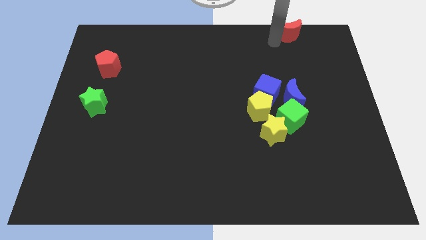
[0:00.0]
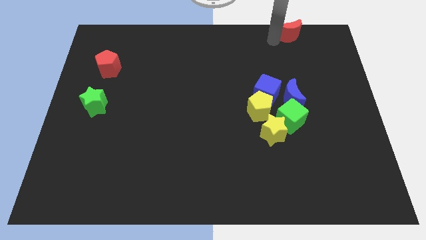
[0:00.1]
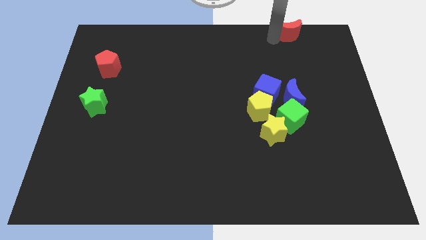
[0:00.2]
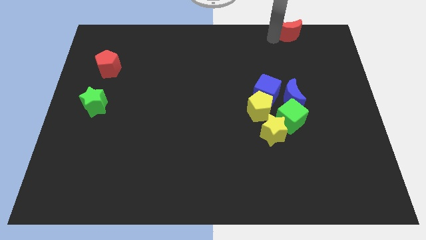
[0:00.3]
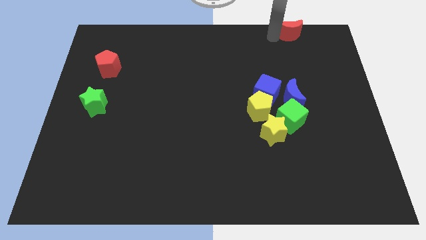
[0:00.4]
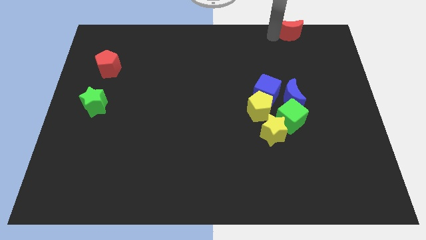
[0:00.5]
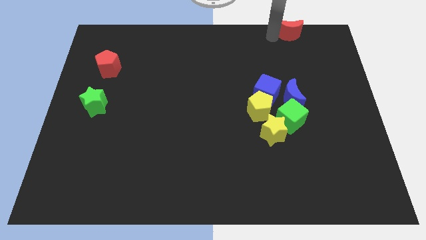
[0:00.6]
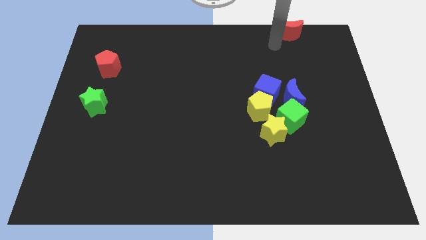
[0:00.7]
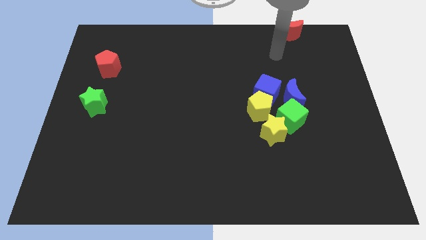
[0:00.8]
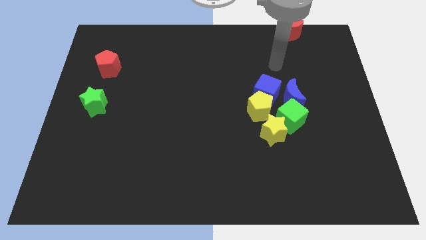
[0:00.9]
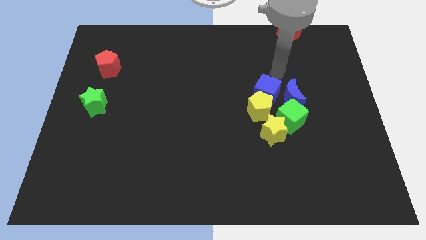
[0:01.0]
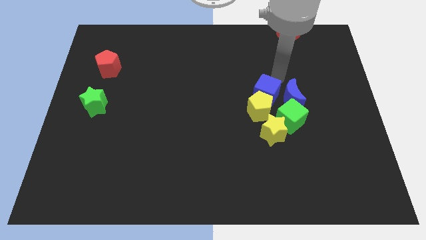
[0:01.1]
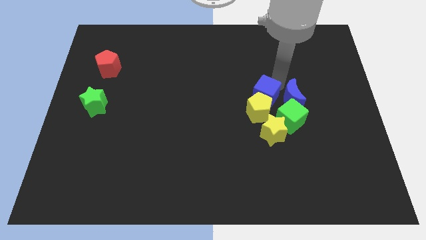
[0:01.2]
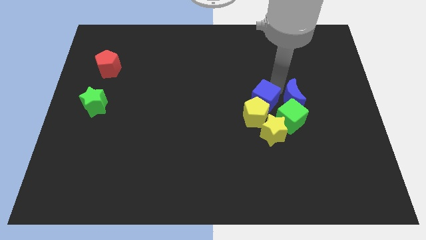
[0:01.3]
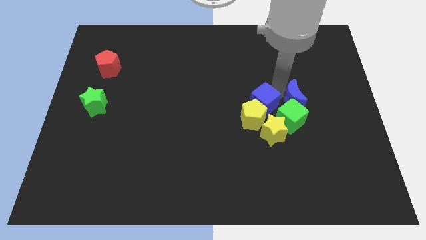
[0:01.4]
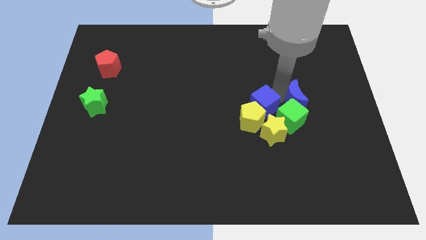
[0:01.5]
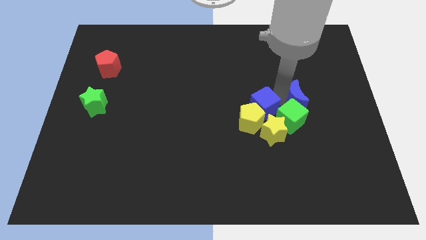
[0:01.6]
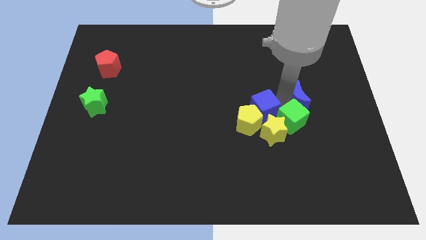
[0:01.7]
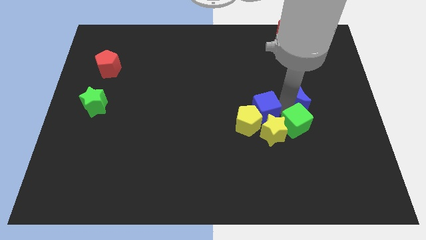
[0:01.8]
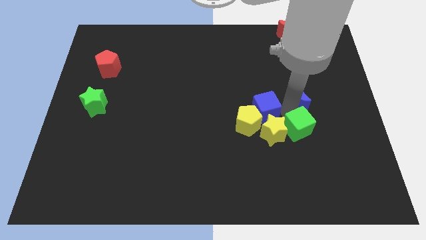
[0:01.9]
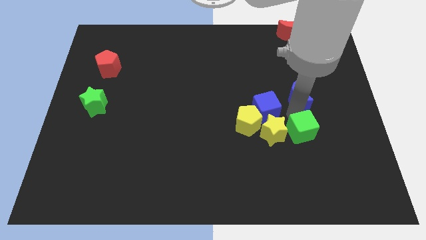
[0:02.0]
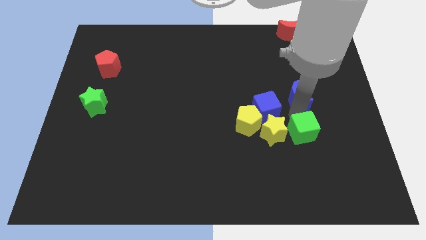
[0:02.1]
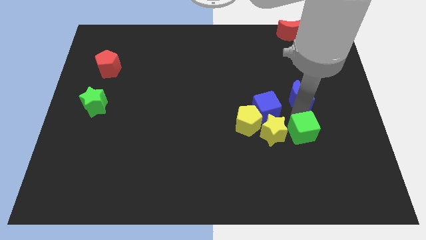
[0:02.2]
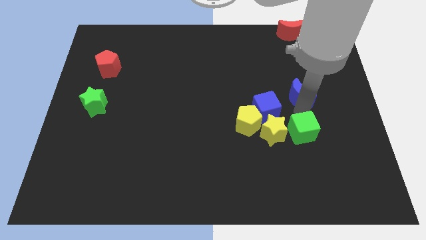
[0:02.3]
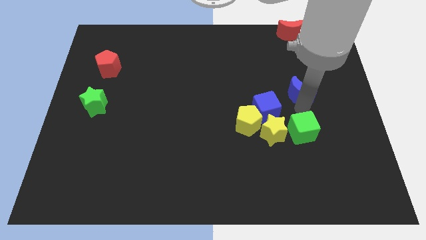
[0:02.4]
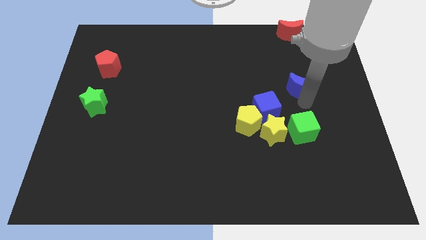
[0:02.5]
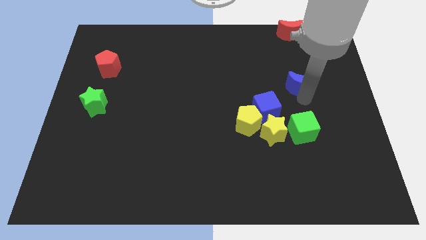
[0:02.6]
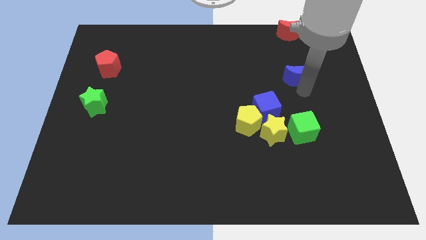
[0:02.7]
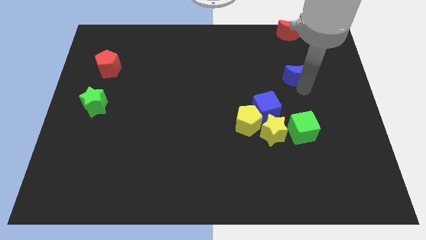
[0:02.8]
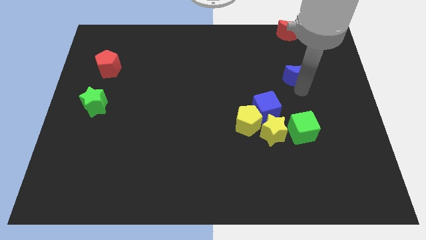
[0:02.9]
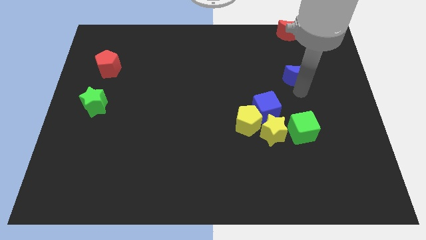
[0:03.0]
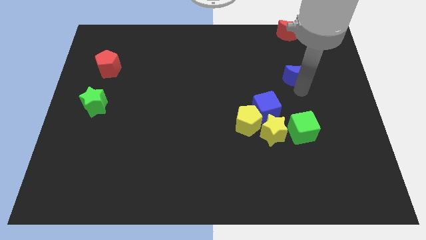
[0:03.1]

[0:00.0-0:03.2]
separate the blue crescent from the blue cube

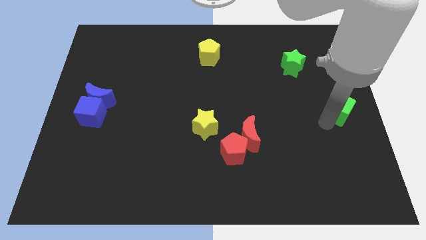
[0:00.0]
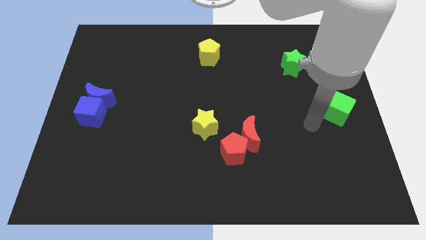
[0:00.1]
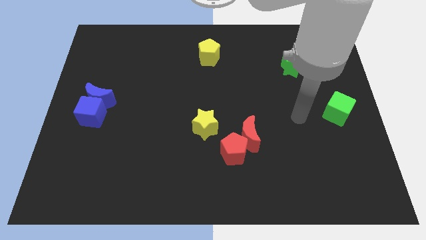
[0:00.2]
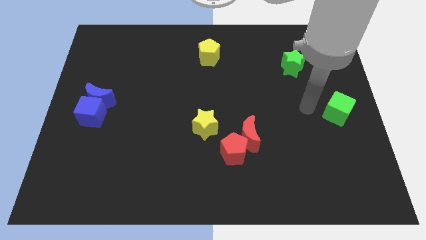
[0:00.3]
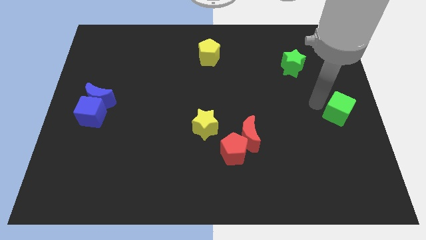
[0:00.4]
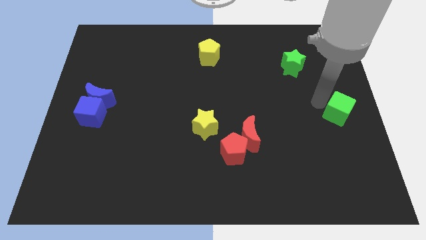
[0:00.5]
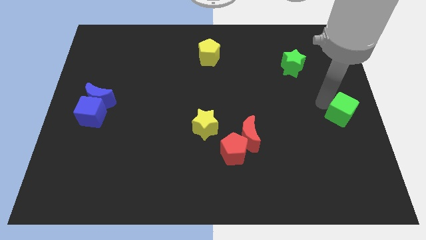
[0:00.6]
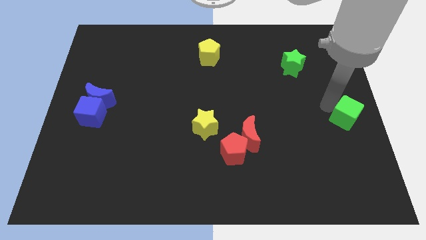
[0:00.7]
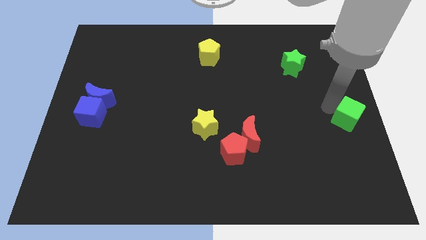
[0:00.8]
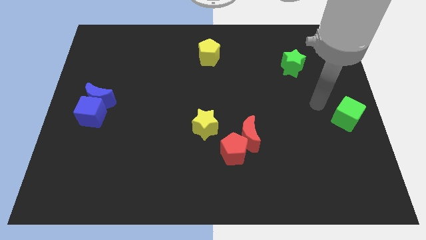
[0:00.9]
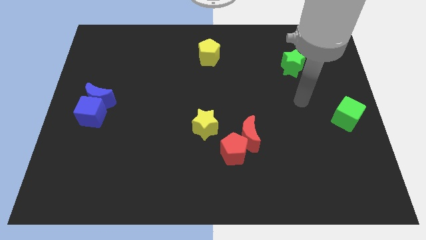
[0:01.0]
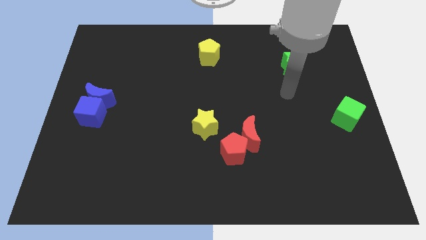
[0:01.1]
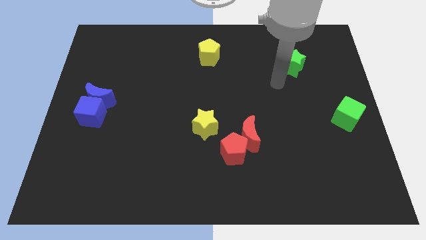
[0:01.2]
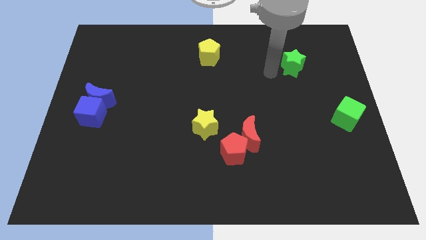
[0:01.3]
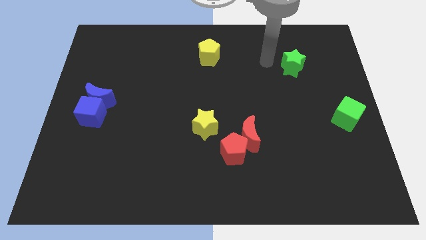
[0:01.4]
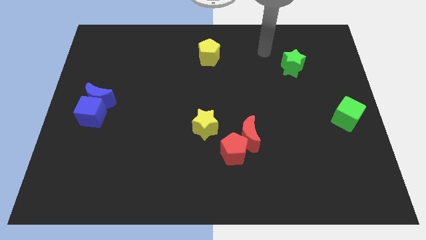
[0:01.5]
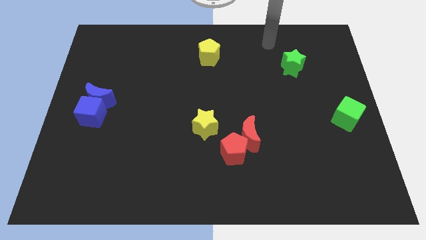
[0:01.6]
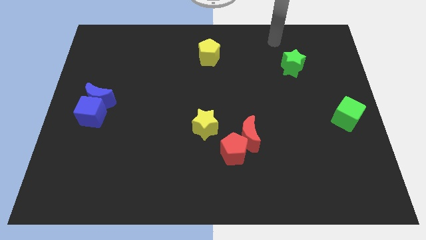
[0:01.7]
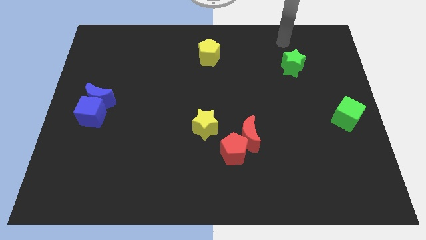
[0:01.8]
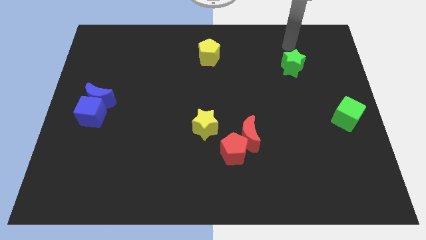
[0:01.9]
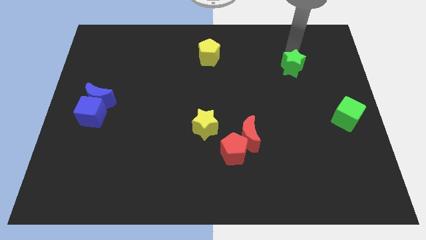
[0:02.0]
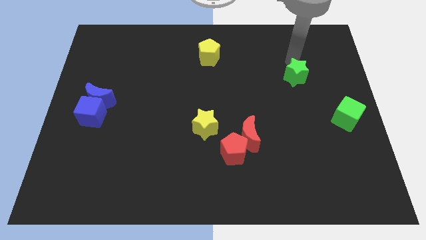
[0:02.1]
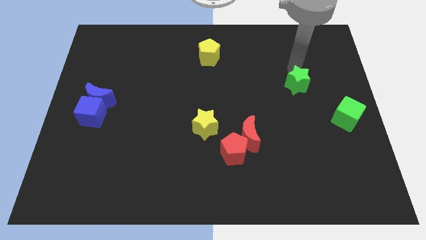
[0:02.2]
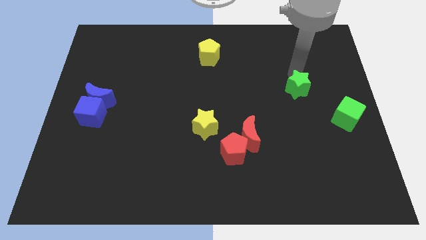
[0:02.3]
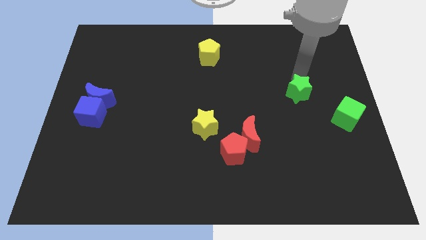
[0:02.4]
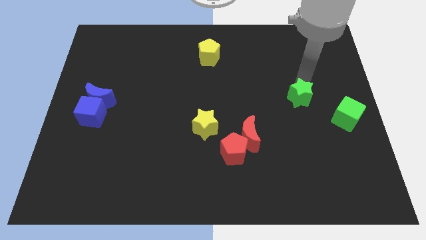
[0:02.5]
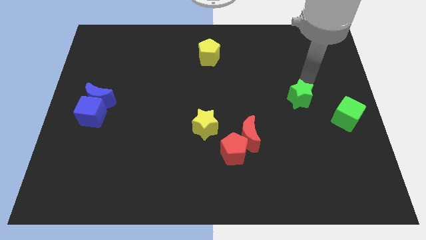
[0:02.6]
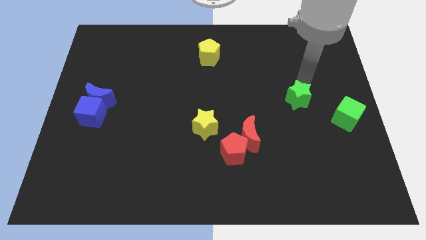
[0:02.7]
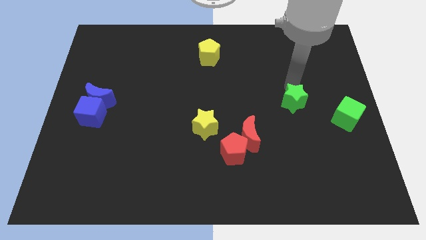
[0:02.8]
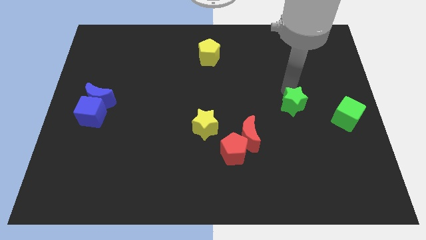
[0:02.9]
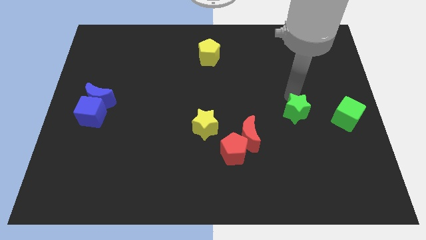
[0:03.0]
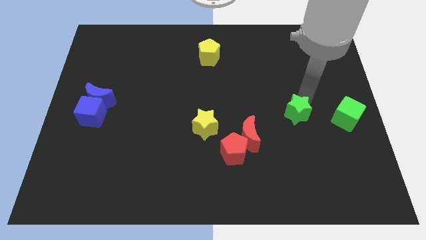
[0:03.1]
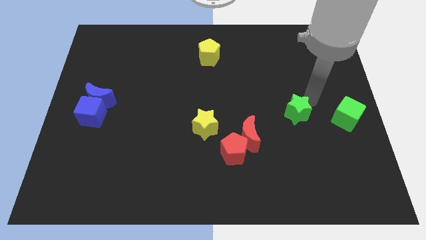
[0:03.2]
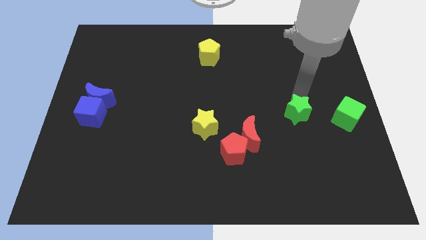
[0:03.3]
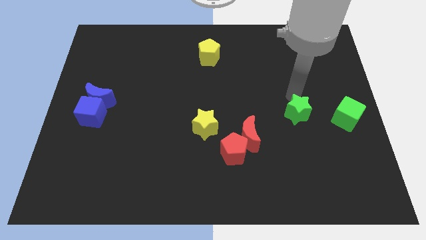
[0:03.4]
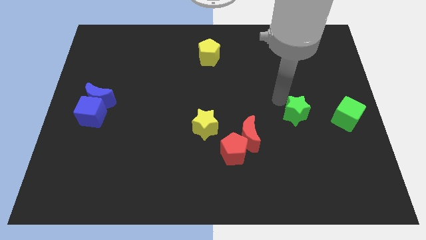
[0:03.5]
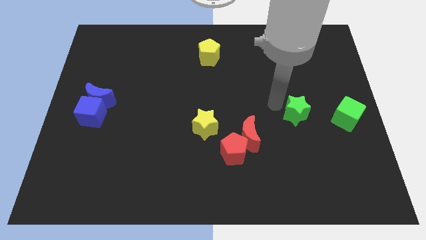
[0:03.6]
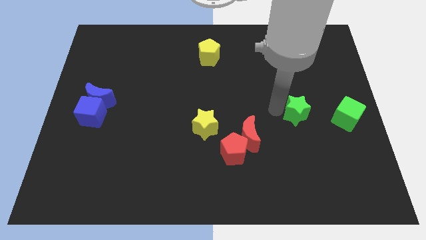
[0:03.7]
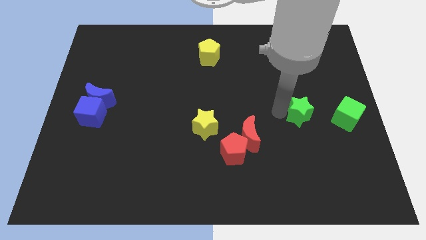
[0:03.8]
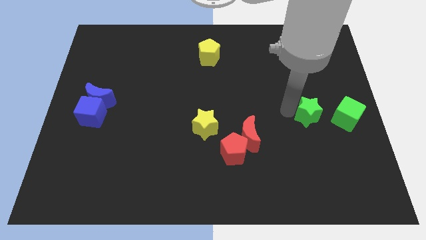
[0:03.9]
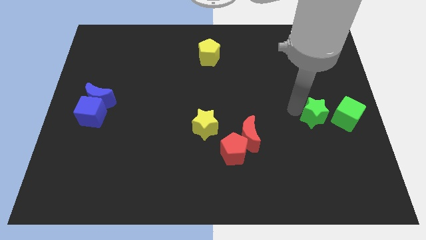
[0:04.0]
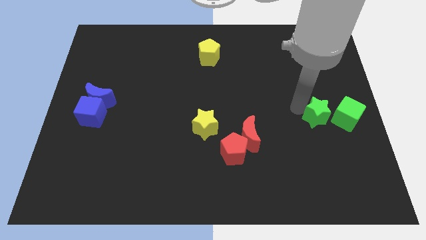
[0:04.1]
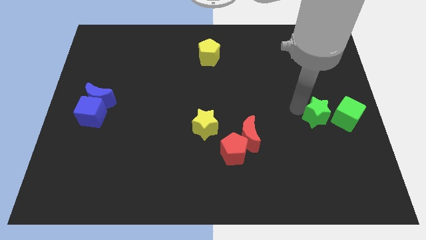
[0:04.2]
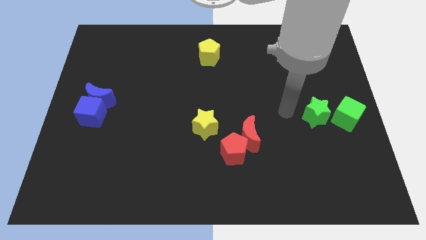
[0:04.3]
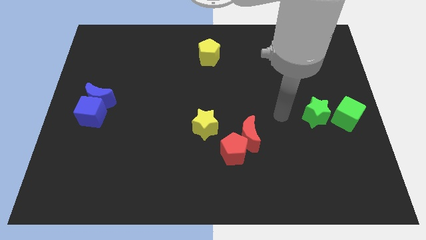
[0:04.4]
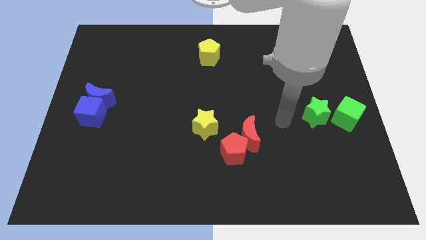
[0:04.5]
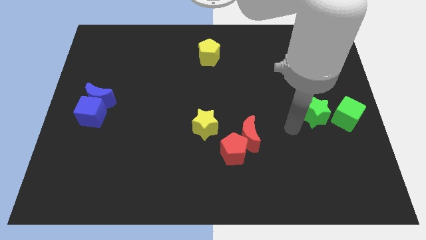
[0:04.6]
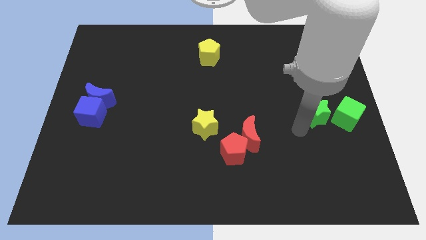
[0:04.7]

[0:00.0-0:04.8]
place the green star left to the green cube

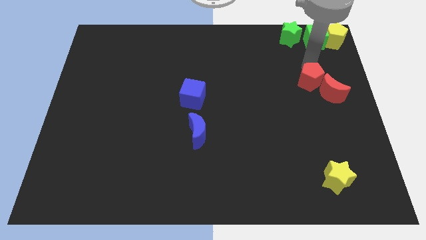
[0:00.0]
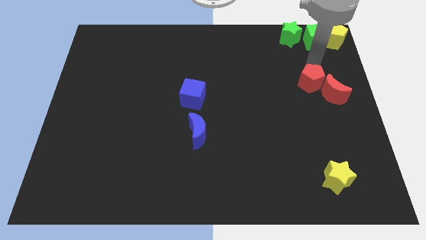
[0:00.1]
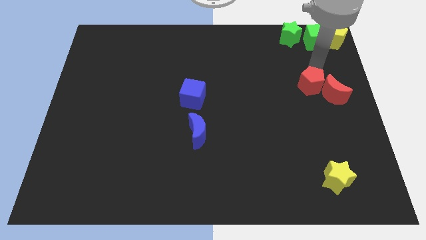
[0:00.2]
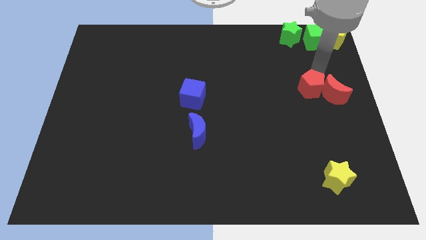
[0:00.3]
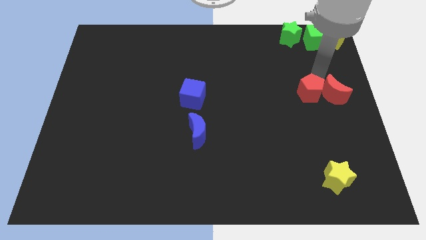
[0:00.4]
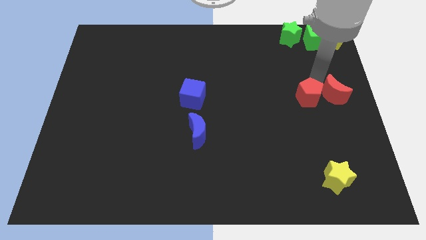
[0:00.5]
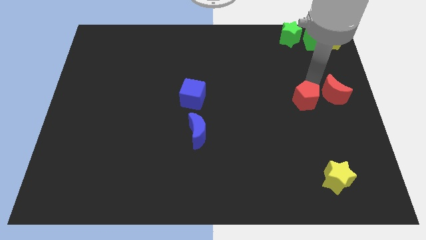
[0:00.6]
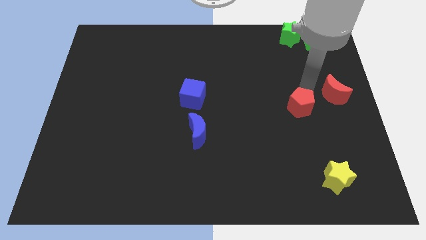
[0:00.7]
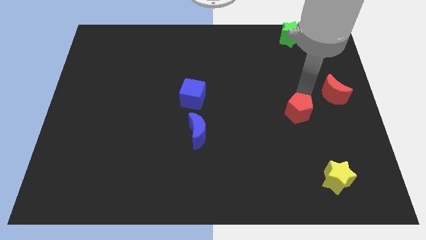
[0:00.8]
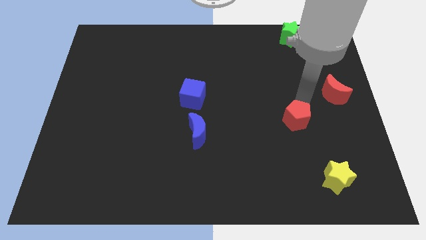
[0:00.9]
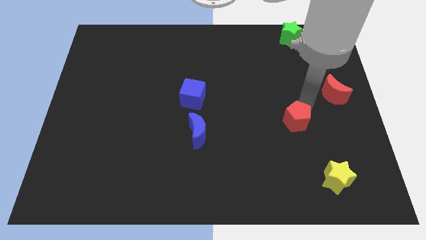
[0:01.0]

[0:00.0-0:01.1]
move the red pentagon to the bottom of the board
